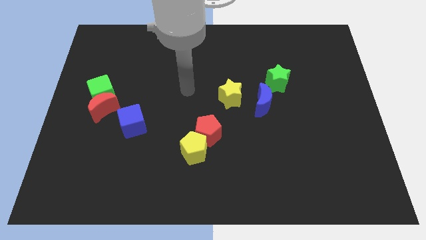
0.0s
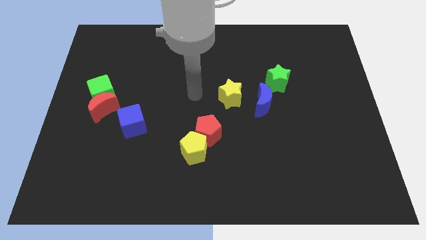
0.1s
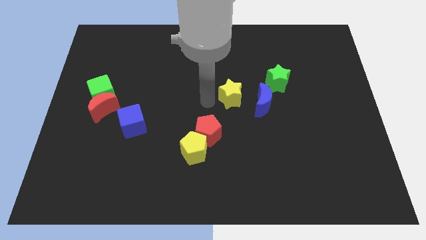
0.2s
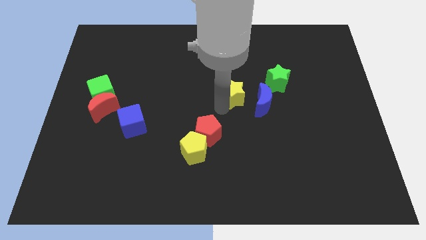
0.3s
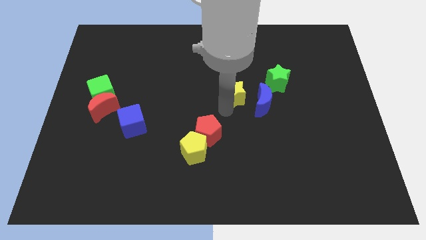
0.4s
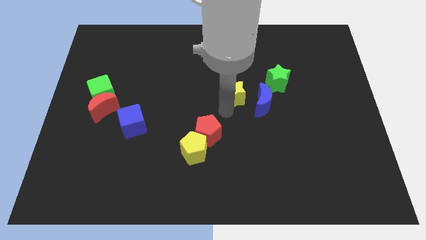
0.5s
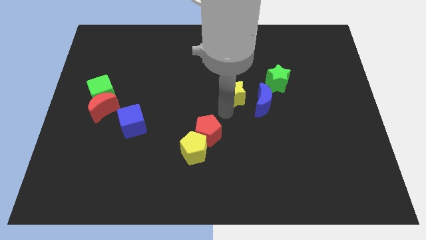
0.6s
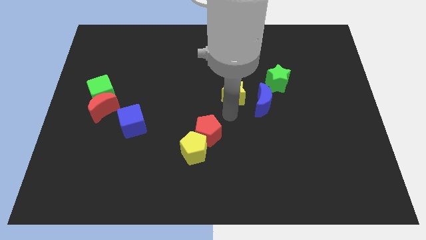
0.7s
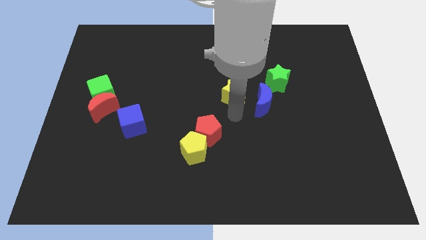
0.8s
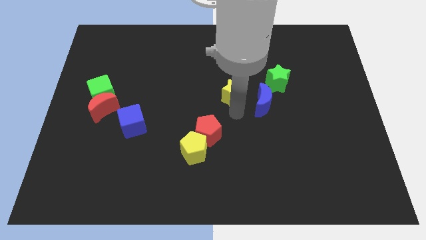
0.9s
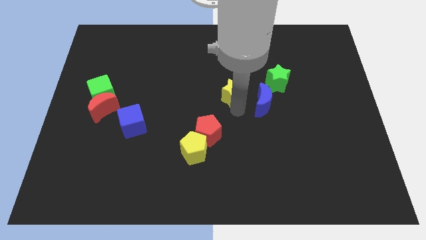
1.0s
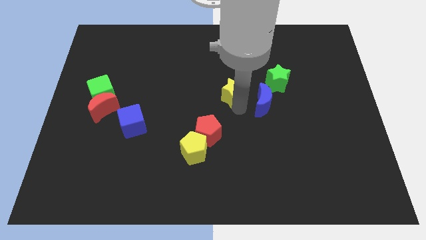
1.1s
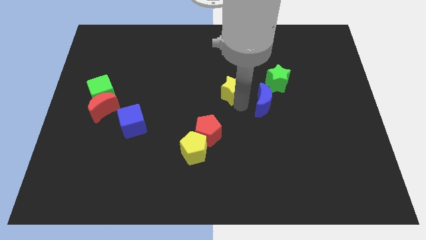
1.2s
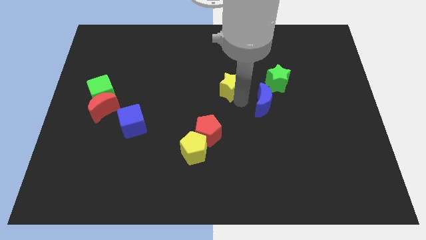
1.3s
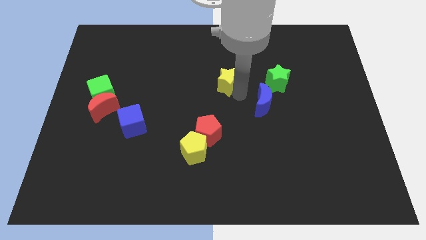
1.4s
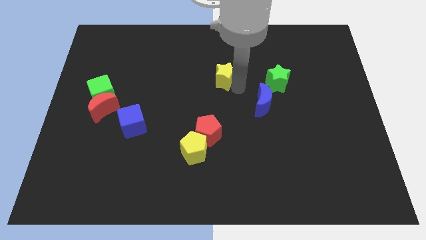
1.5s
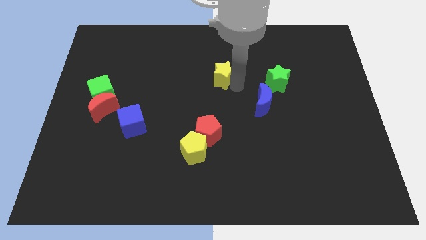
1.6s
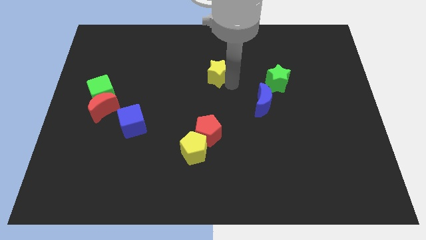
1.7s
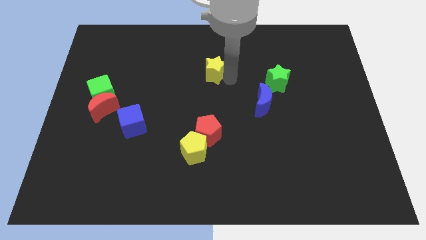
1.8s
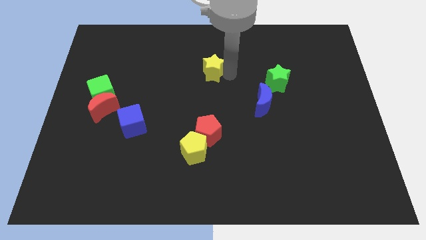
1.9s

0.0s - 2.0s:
push the yellow star towards top

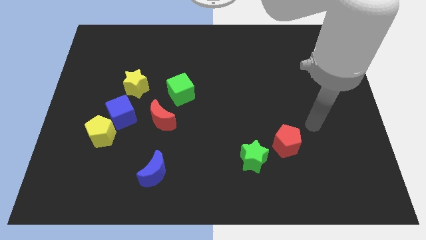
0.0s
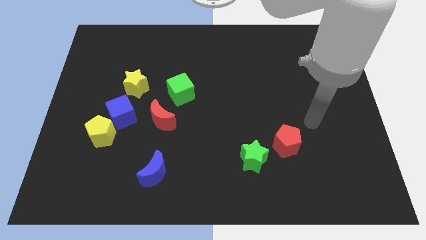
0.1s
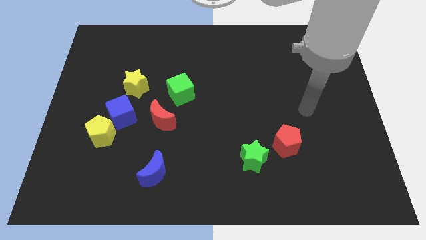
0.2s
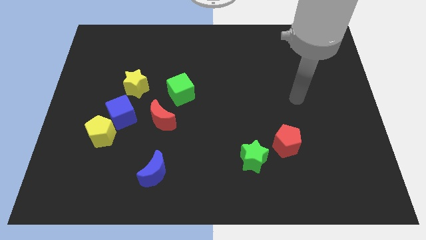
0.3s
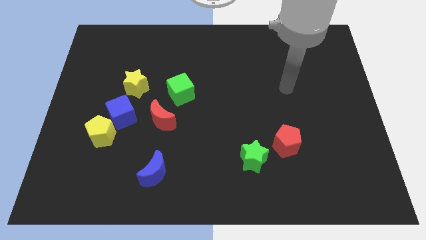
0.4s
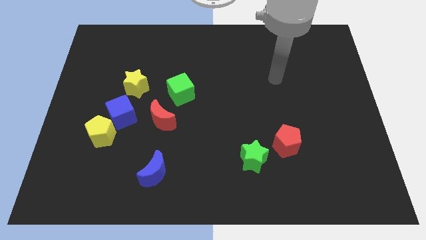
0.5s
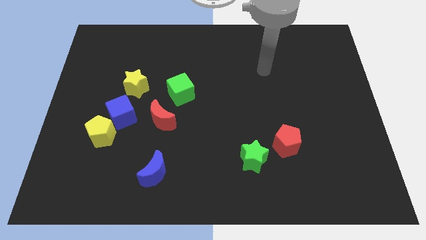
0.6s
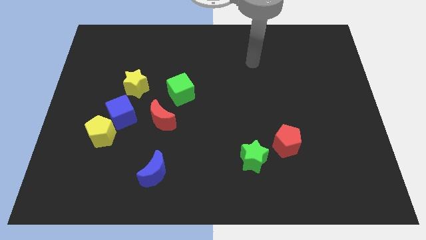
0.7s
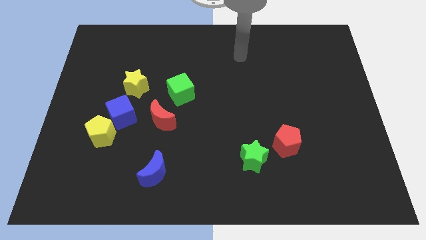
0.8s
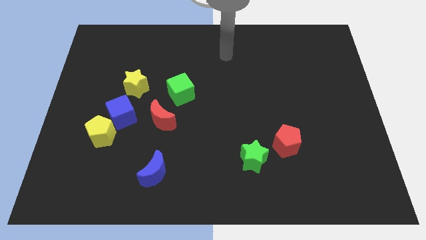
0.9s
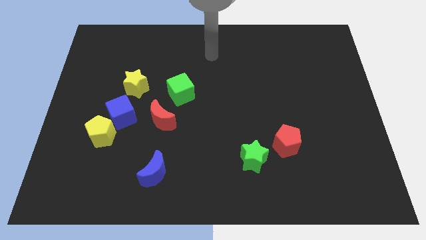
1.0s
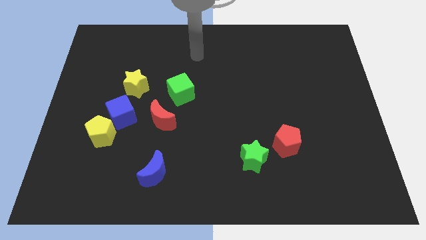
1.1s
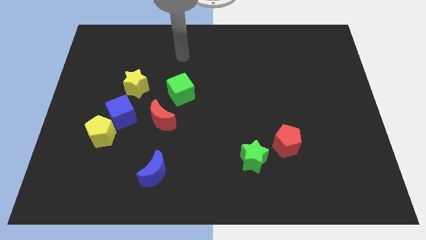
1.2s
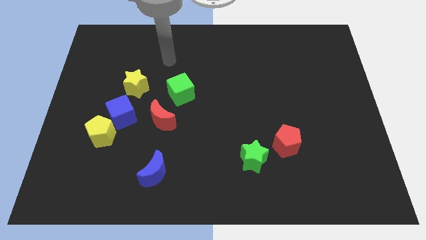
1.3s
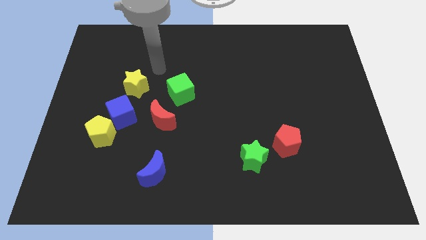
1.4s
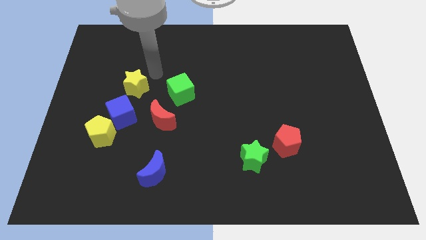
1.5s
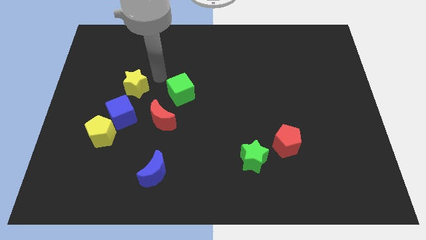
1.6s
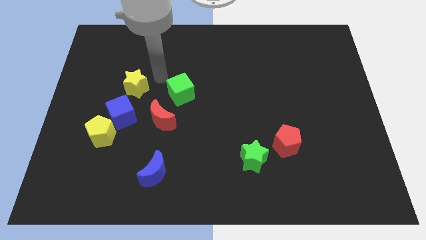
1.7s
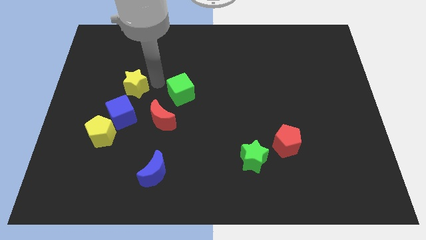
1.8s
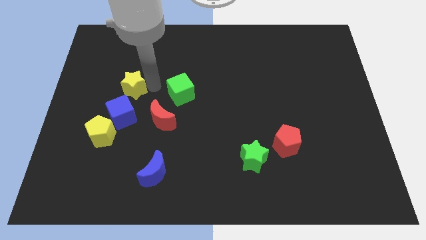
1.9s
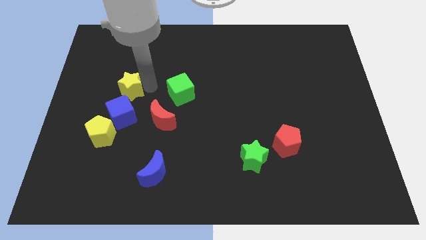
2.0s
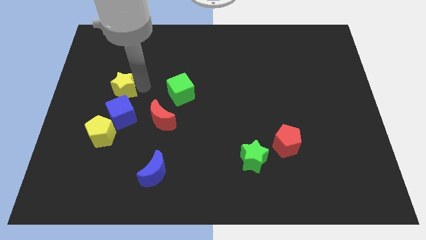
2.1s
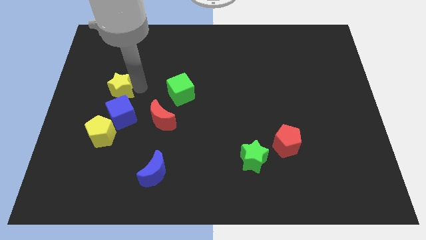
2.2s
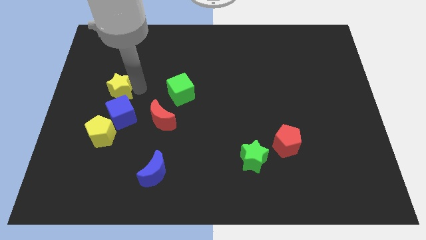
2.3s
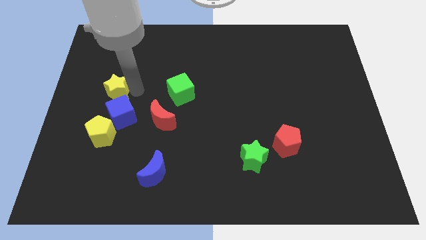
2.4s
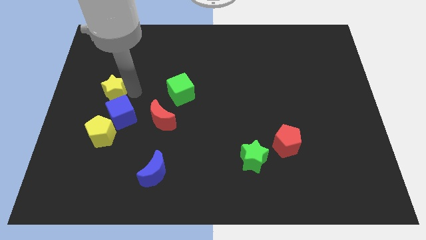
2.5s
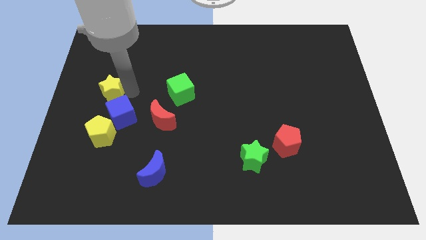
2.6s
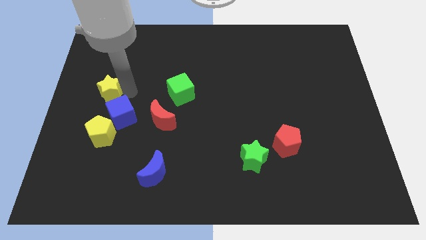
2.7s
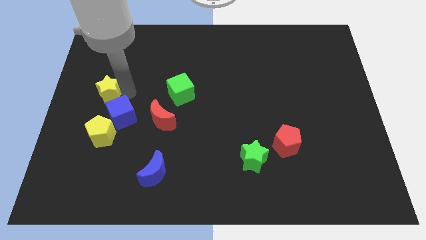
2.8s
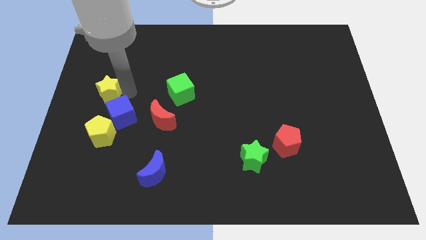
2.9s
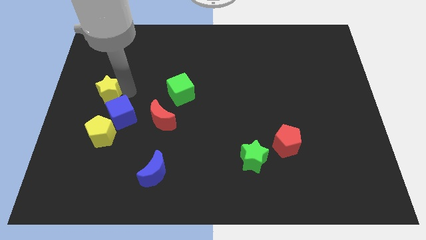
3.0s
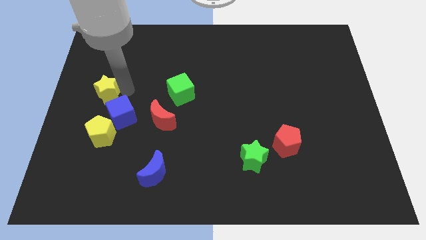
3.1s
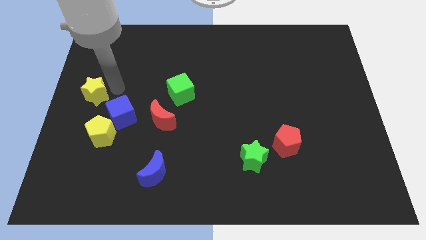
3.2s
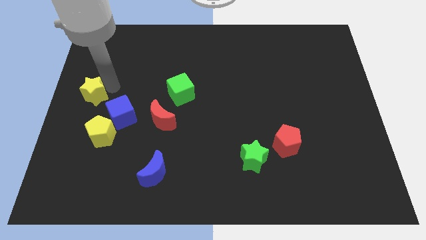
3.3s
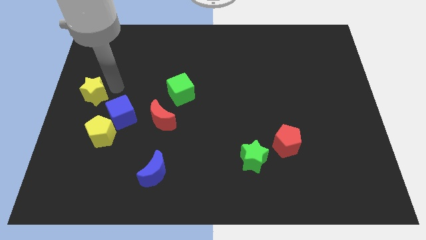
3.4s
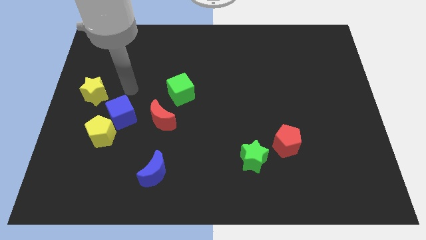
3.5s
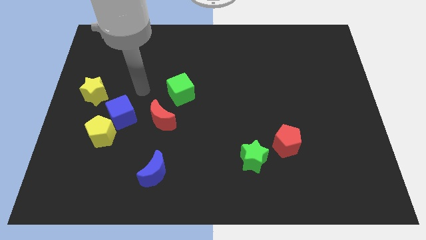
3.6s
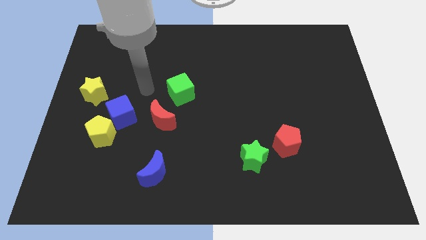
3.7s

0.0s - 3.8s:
slide the yellow star towards the center left

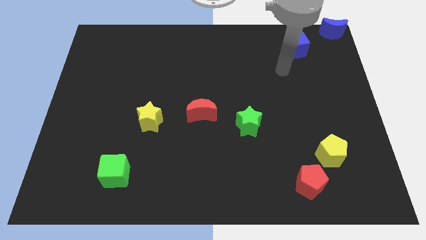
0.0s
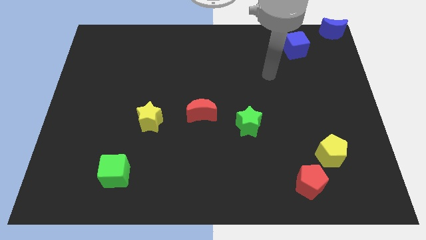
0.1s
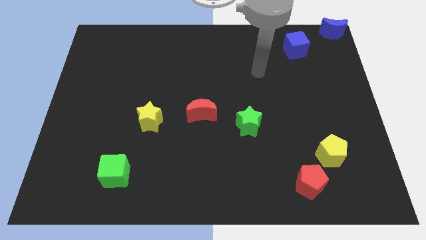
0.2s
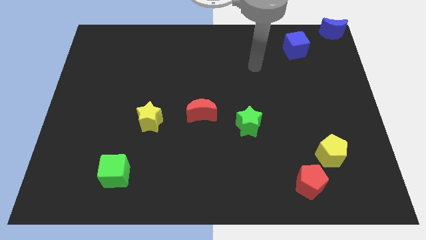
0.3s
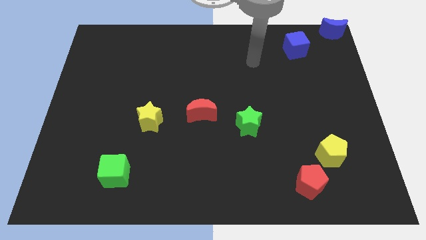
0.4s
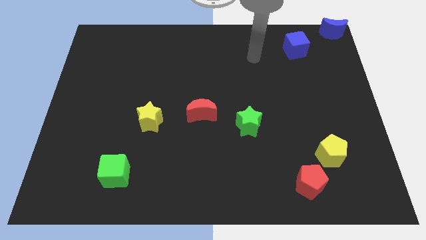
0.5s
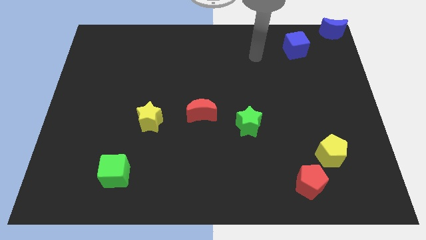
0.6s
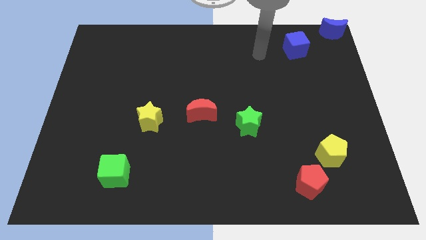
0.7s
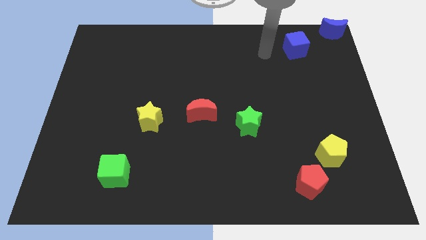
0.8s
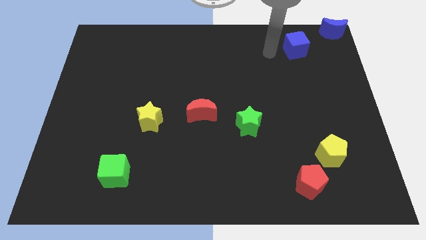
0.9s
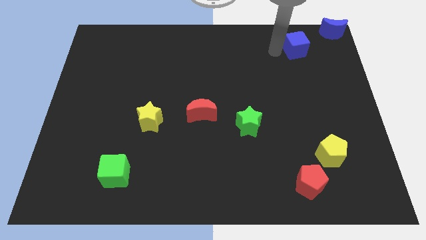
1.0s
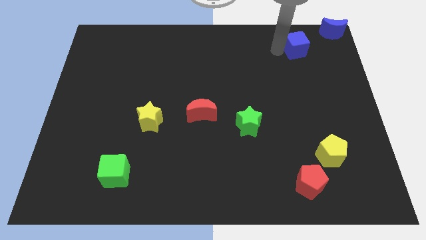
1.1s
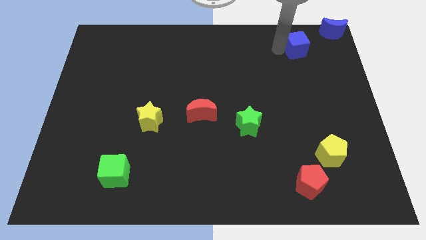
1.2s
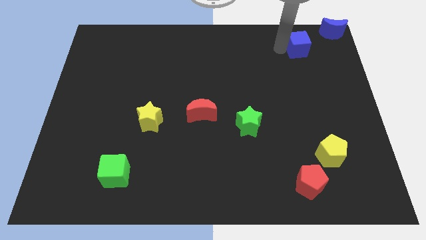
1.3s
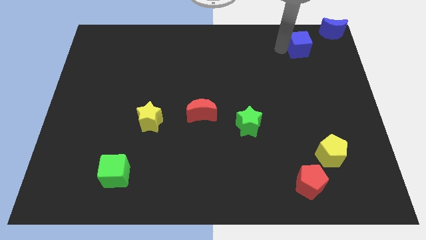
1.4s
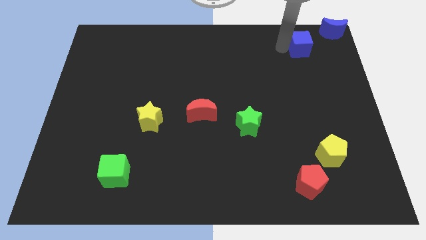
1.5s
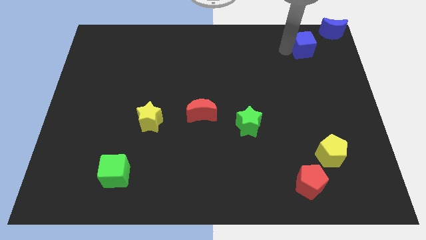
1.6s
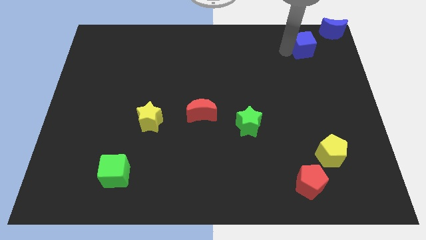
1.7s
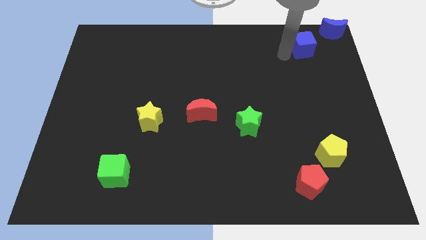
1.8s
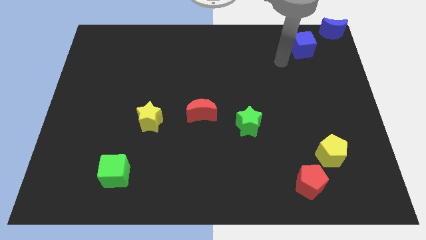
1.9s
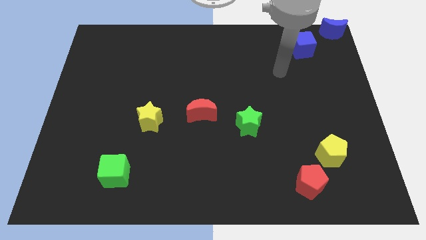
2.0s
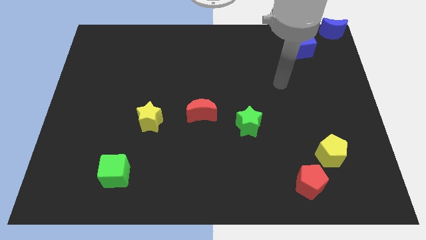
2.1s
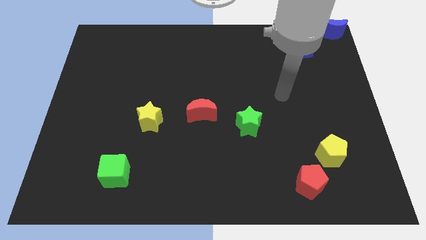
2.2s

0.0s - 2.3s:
slightly push the blue cube towards blue moon

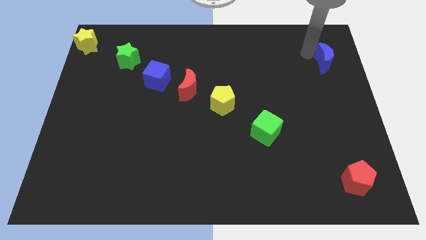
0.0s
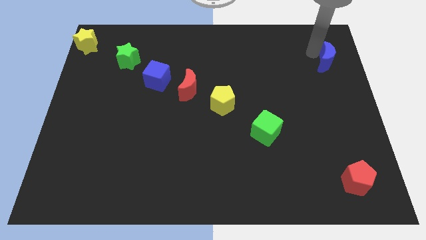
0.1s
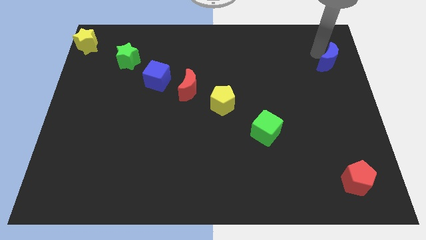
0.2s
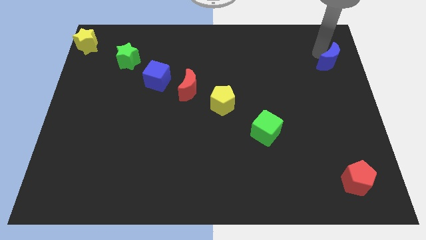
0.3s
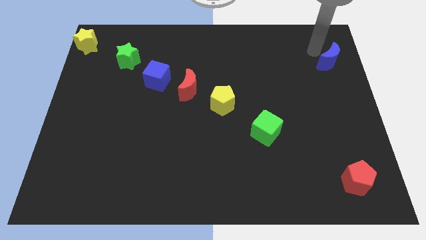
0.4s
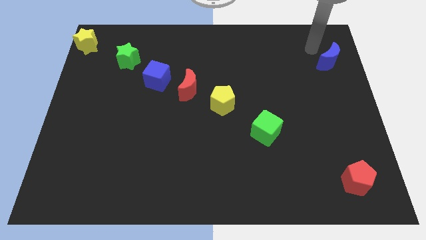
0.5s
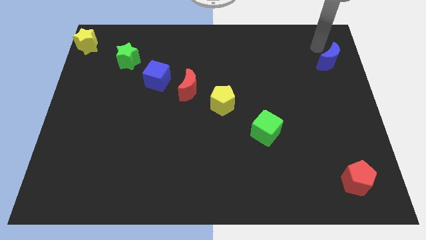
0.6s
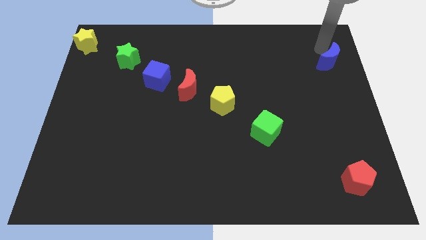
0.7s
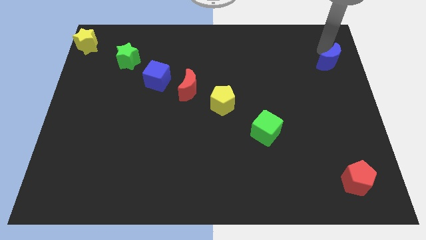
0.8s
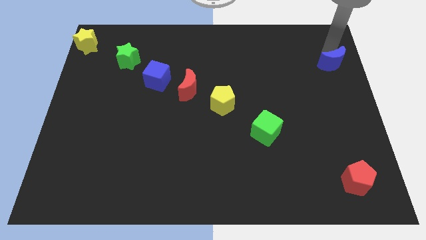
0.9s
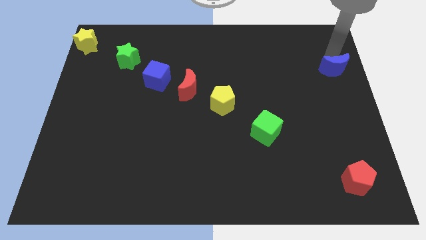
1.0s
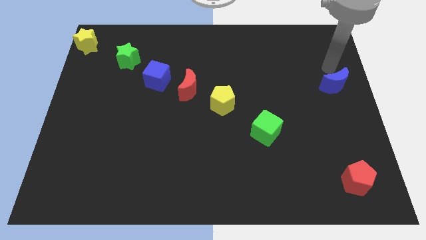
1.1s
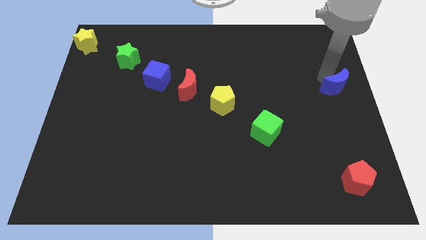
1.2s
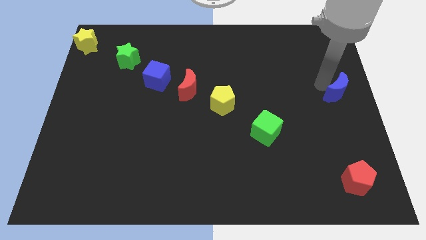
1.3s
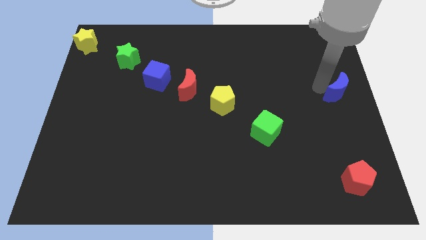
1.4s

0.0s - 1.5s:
push blue crescent slightly below
